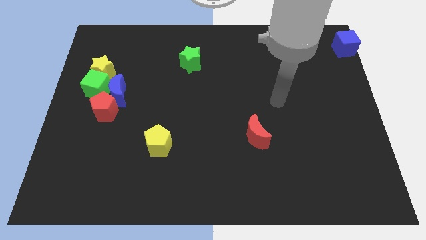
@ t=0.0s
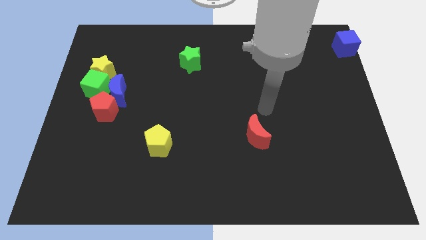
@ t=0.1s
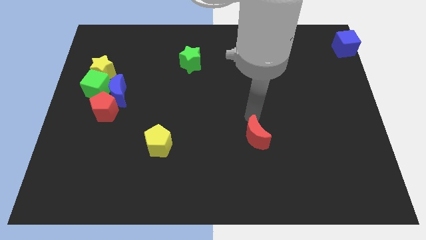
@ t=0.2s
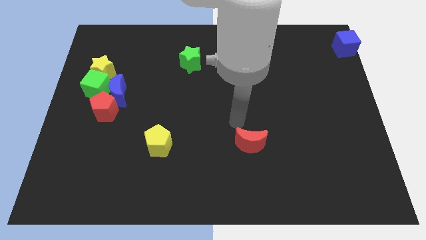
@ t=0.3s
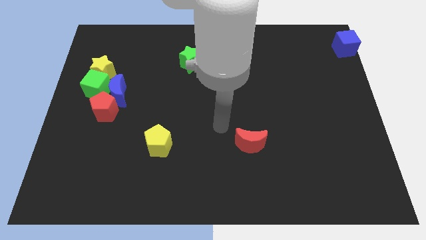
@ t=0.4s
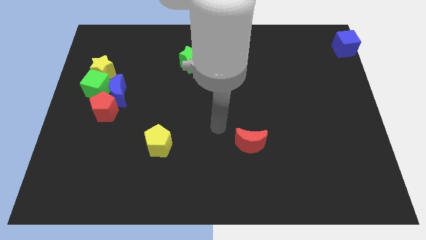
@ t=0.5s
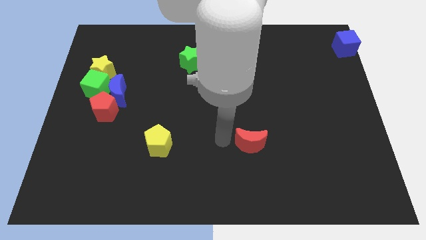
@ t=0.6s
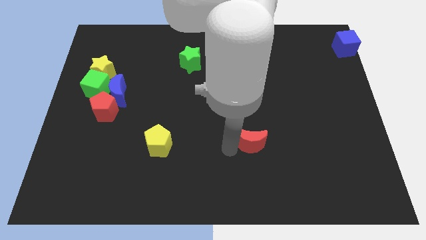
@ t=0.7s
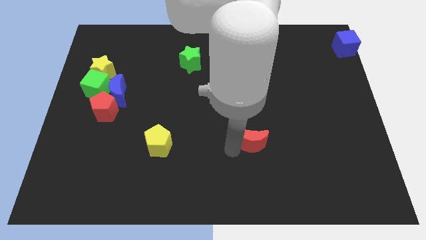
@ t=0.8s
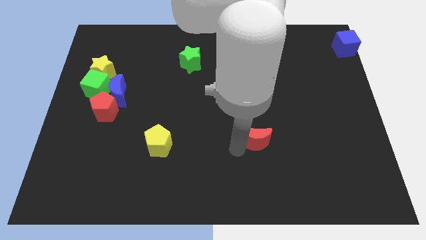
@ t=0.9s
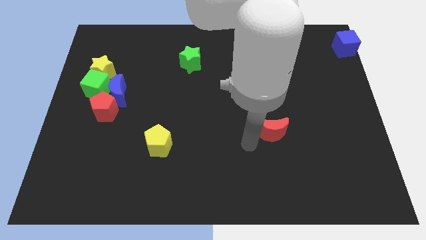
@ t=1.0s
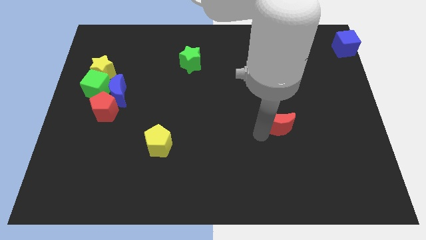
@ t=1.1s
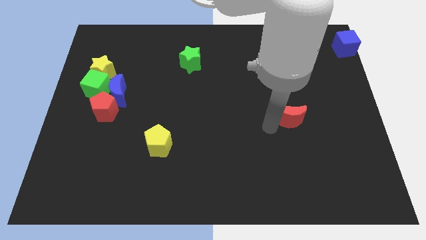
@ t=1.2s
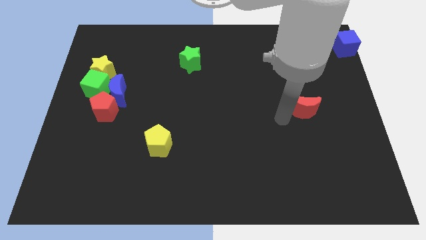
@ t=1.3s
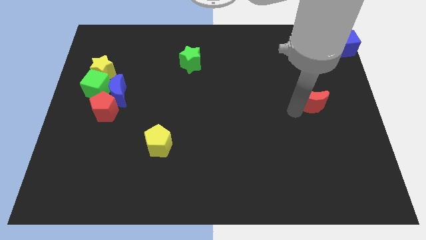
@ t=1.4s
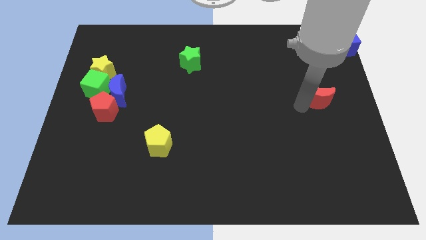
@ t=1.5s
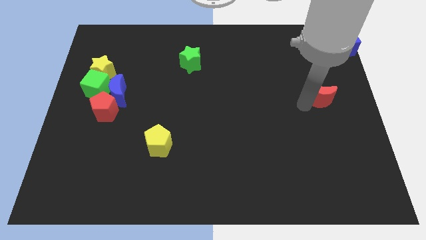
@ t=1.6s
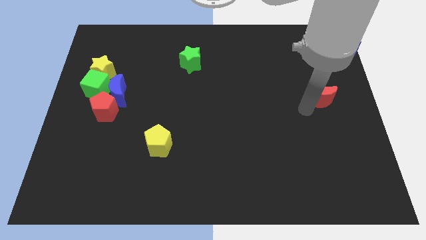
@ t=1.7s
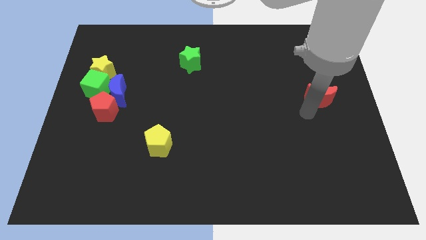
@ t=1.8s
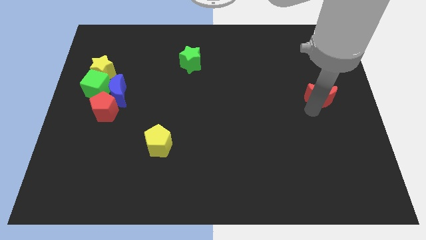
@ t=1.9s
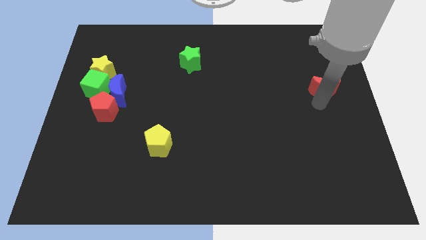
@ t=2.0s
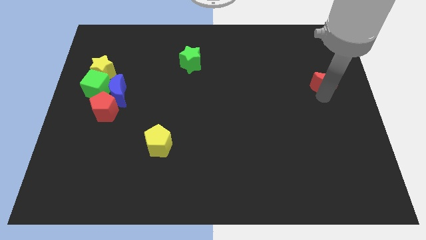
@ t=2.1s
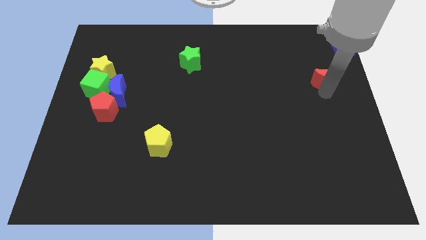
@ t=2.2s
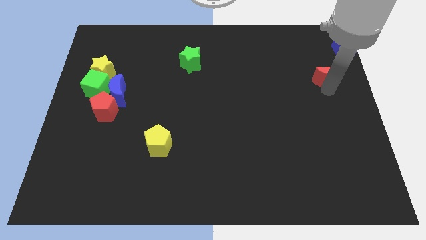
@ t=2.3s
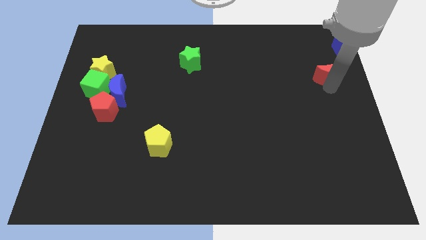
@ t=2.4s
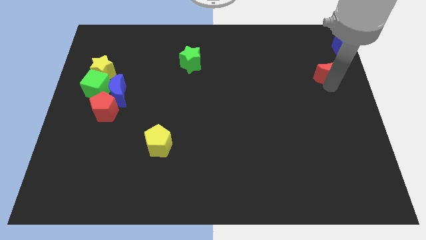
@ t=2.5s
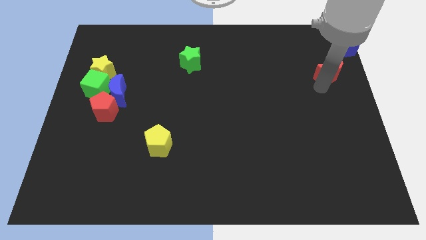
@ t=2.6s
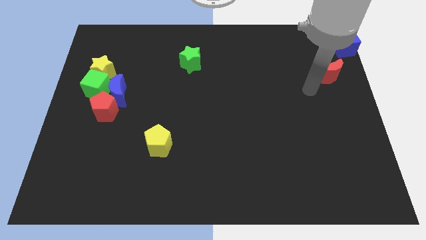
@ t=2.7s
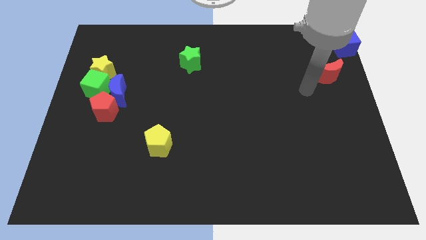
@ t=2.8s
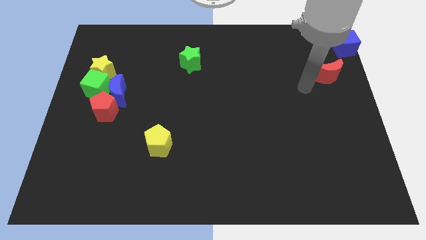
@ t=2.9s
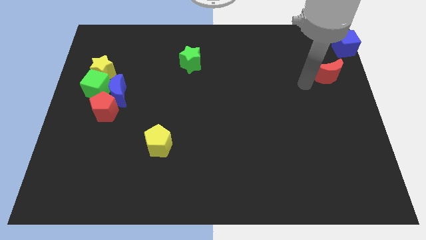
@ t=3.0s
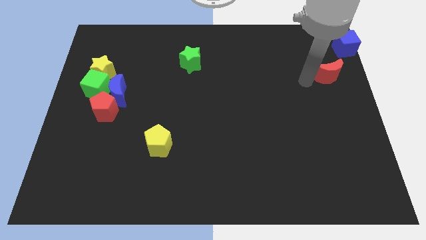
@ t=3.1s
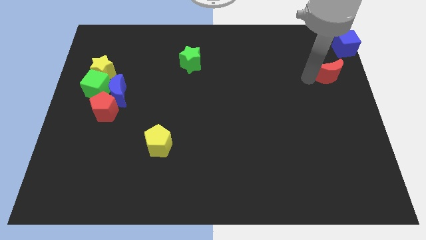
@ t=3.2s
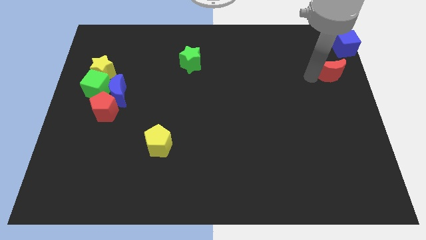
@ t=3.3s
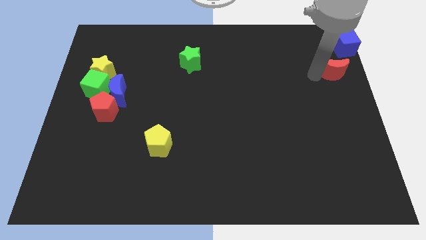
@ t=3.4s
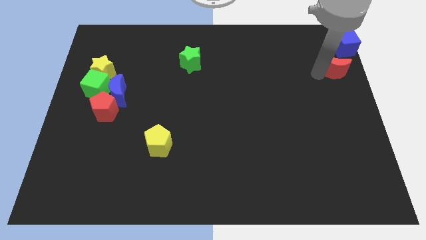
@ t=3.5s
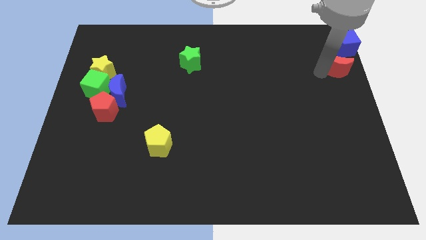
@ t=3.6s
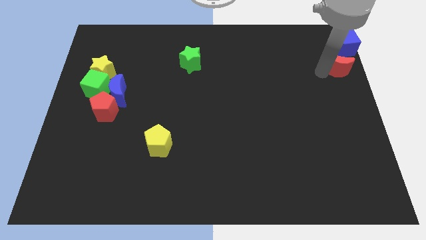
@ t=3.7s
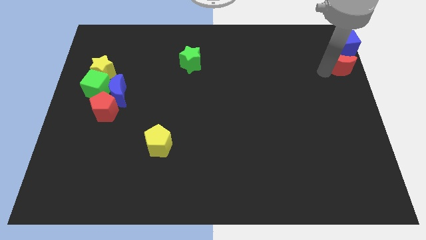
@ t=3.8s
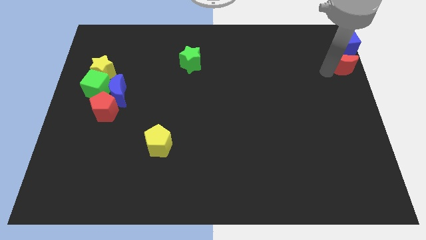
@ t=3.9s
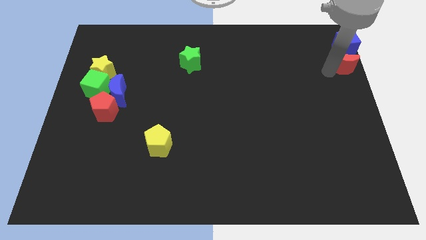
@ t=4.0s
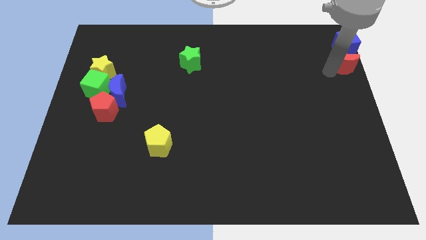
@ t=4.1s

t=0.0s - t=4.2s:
move the red crescent towards the blue cube

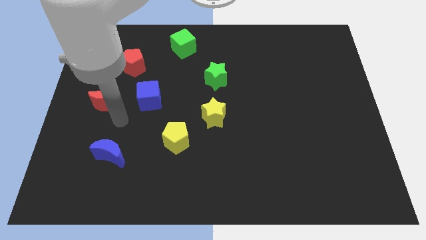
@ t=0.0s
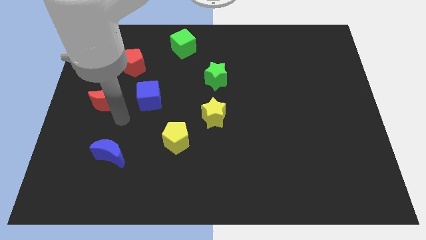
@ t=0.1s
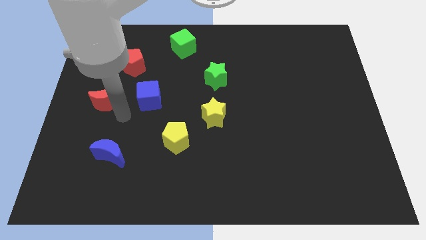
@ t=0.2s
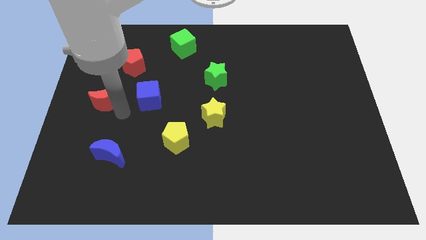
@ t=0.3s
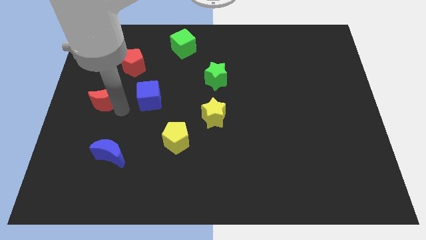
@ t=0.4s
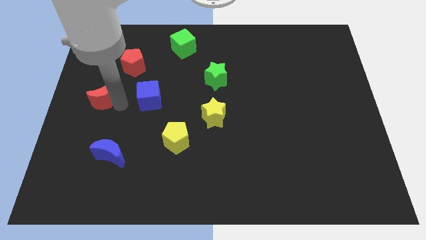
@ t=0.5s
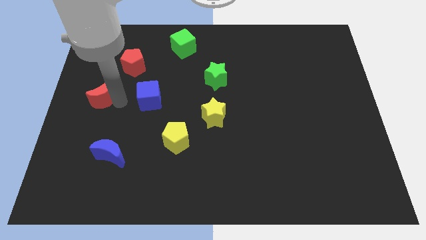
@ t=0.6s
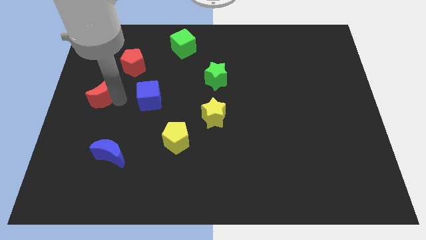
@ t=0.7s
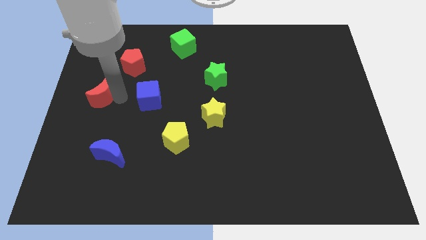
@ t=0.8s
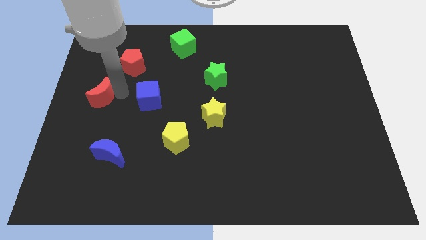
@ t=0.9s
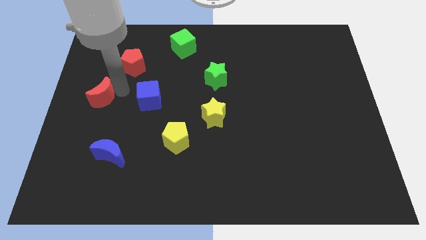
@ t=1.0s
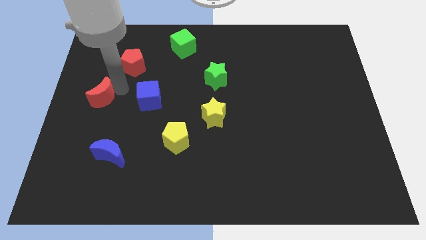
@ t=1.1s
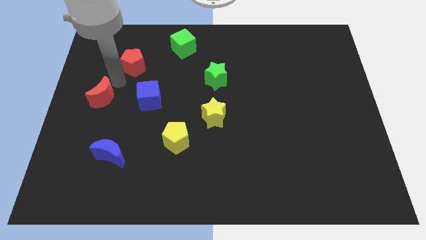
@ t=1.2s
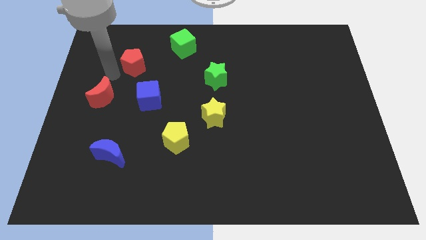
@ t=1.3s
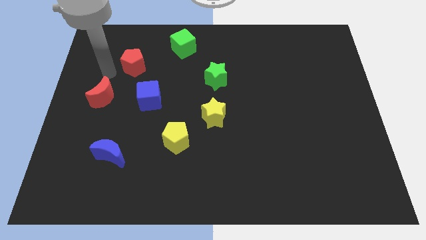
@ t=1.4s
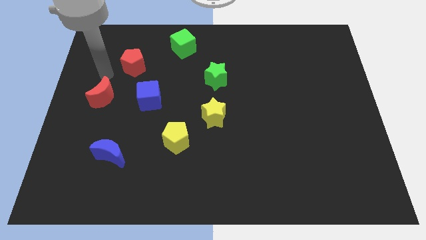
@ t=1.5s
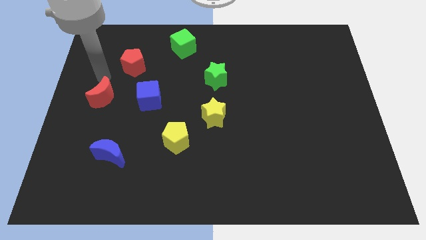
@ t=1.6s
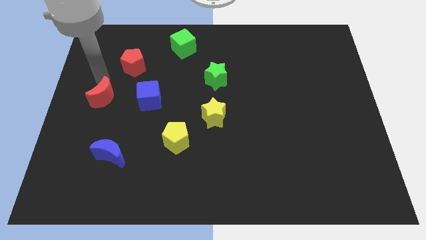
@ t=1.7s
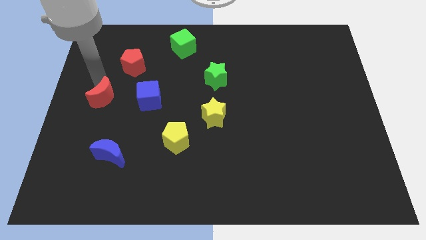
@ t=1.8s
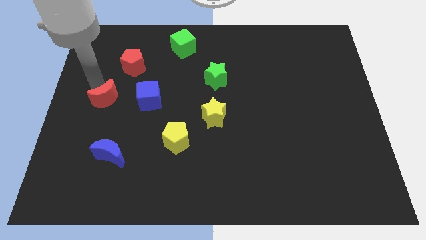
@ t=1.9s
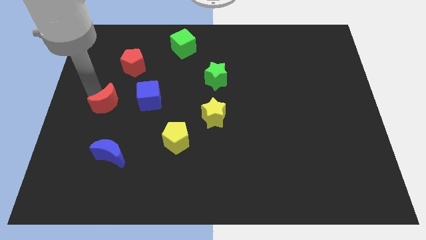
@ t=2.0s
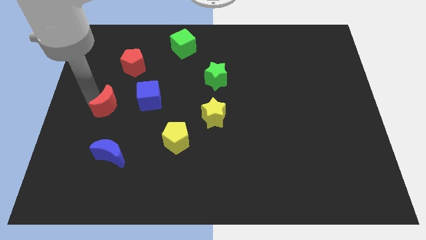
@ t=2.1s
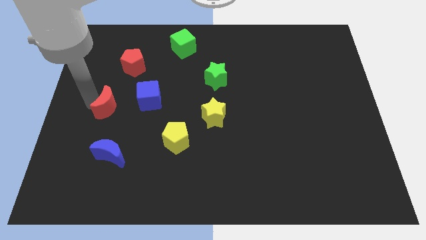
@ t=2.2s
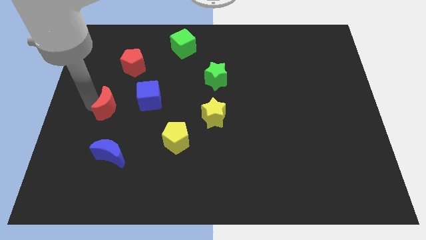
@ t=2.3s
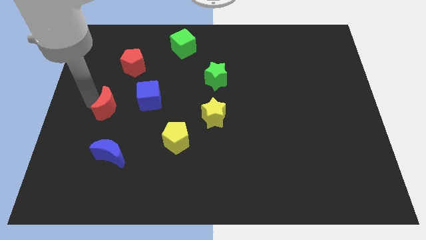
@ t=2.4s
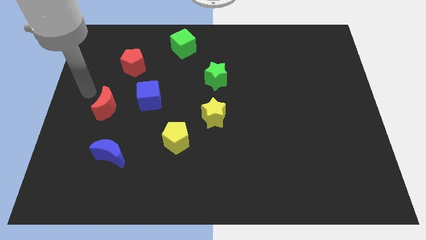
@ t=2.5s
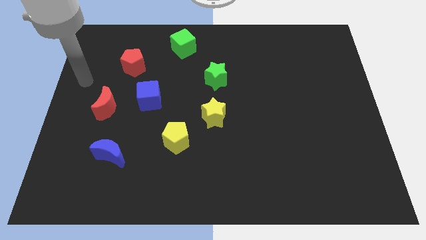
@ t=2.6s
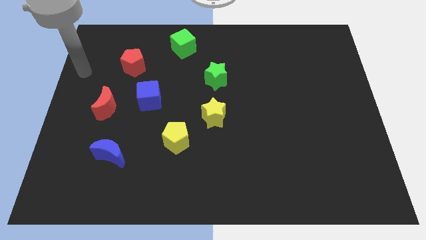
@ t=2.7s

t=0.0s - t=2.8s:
place the red moon left to the blue cube

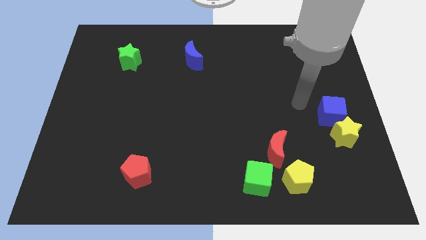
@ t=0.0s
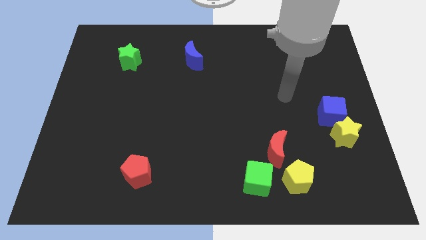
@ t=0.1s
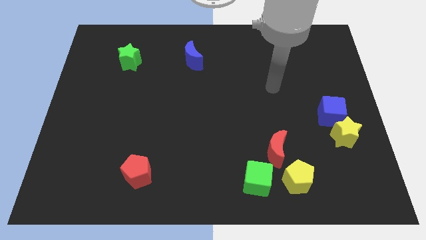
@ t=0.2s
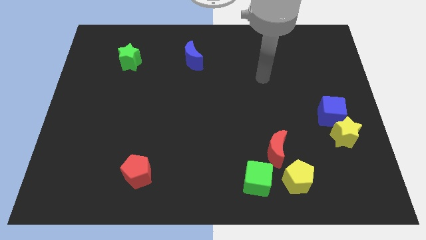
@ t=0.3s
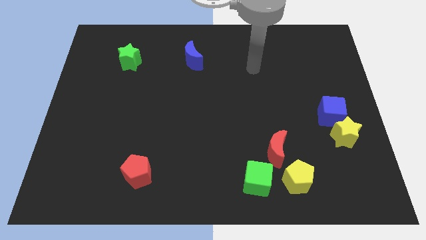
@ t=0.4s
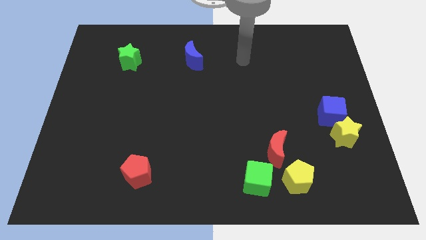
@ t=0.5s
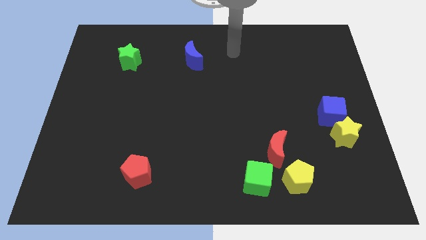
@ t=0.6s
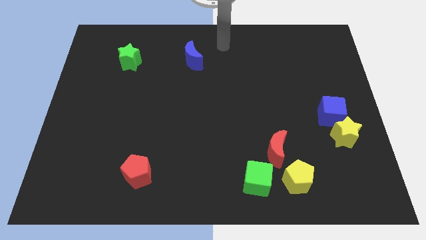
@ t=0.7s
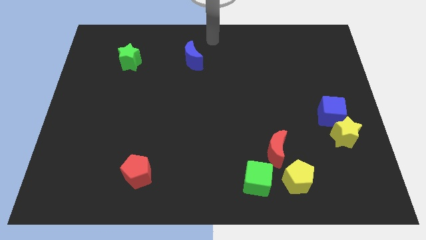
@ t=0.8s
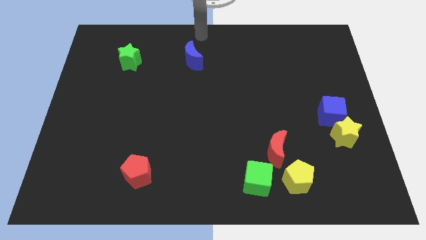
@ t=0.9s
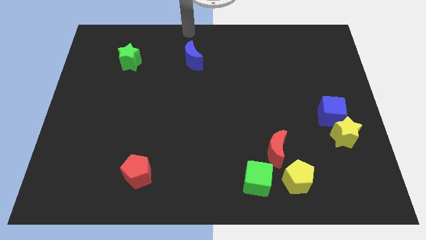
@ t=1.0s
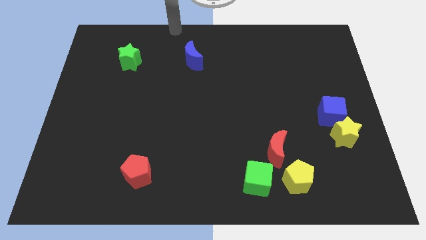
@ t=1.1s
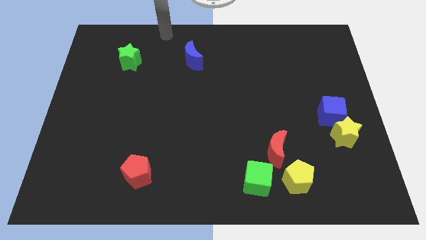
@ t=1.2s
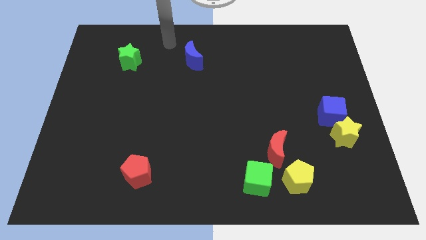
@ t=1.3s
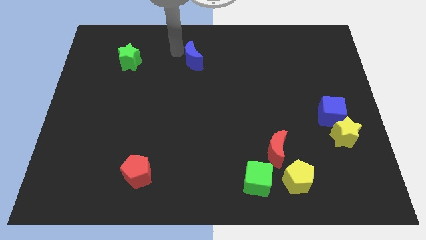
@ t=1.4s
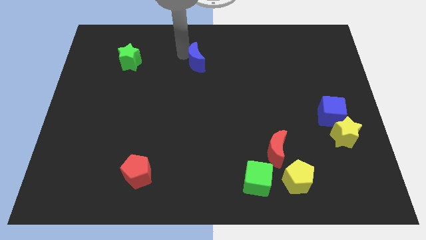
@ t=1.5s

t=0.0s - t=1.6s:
tap the blue crescent

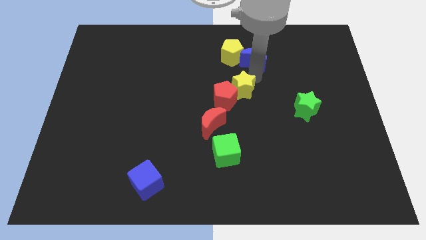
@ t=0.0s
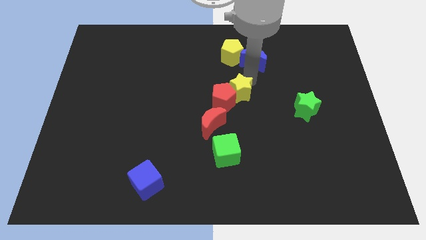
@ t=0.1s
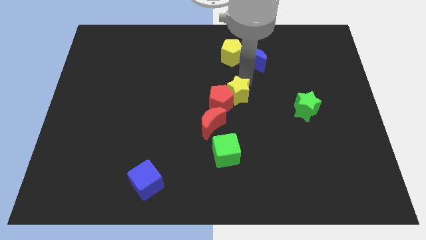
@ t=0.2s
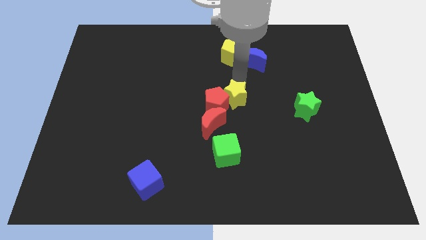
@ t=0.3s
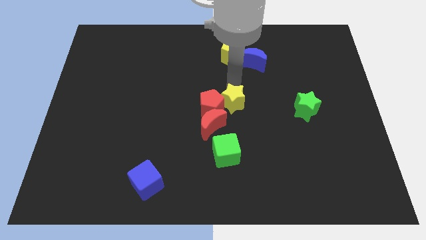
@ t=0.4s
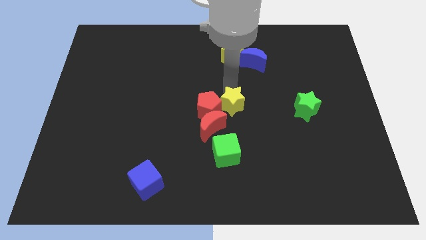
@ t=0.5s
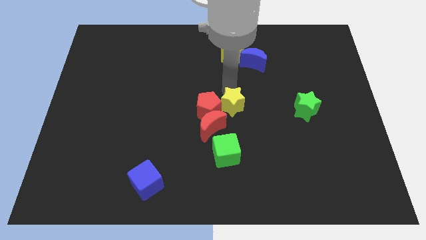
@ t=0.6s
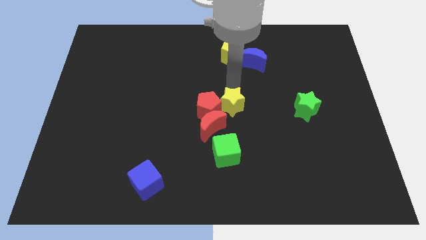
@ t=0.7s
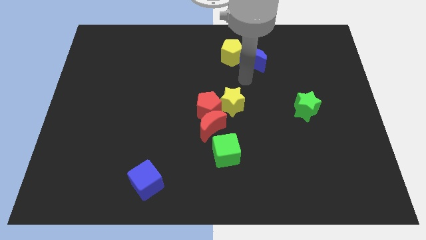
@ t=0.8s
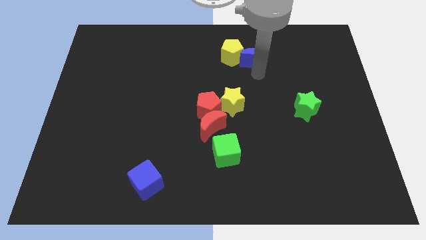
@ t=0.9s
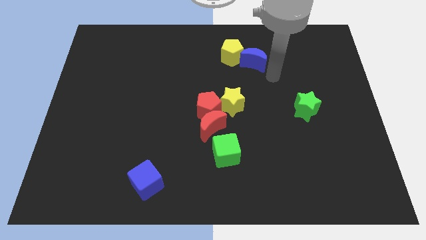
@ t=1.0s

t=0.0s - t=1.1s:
push yellow star in to red pentagon
